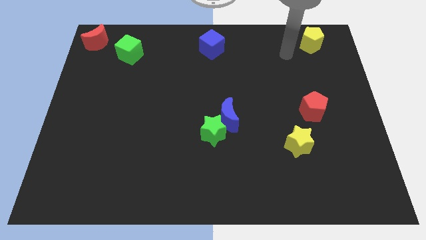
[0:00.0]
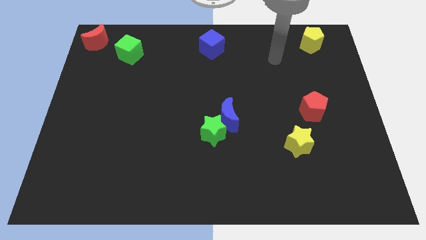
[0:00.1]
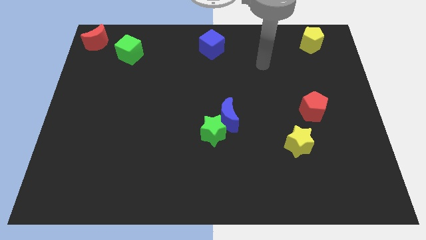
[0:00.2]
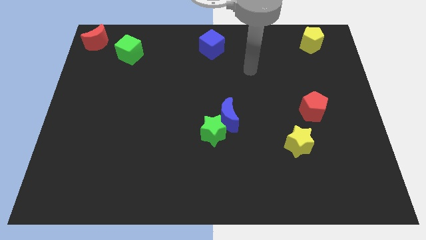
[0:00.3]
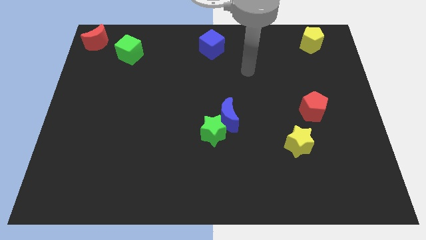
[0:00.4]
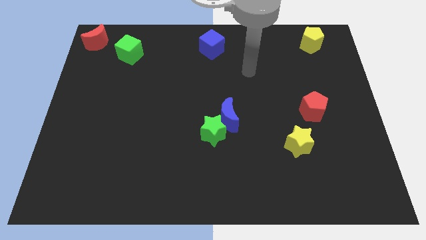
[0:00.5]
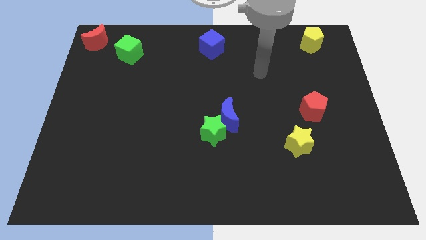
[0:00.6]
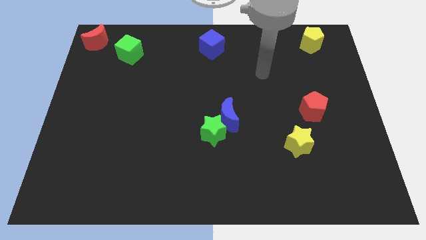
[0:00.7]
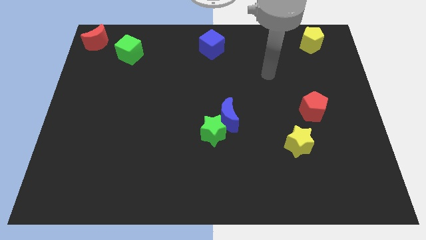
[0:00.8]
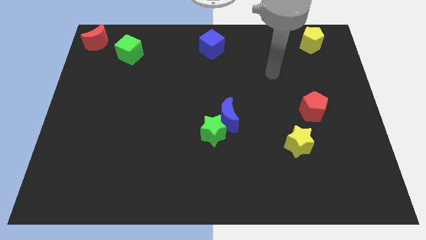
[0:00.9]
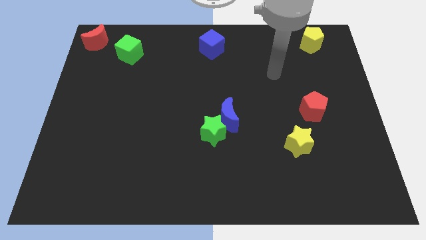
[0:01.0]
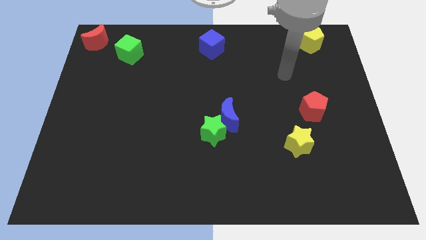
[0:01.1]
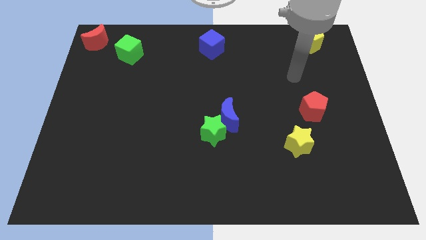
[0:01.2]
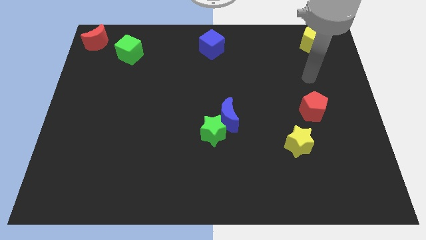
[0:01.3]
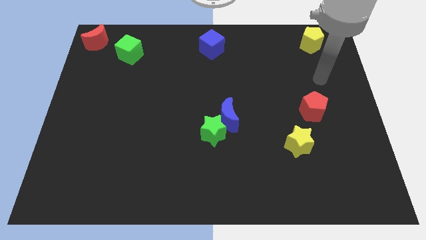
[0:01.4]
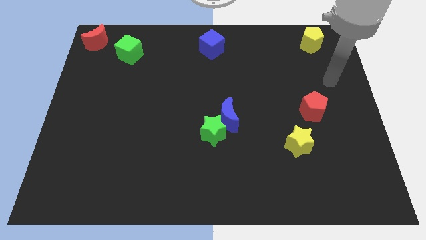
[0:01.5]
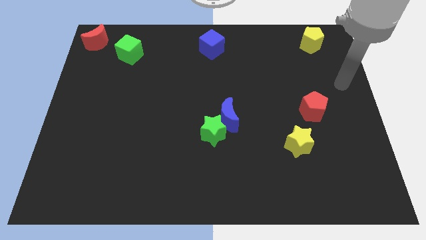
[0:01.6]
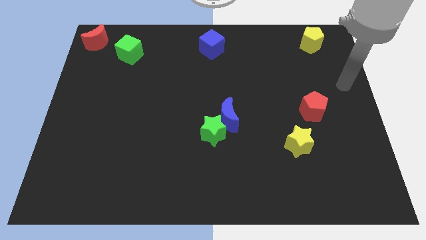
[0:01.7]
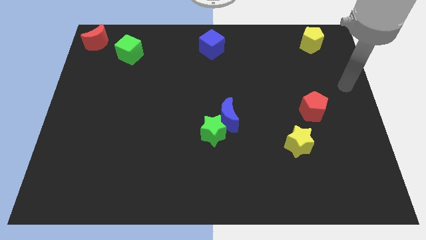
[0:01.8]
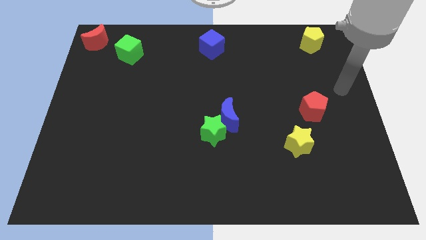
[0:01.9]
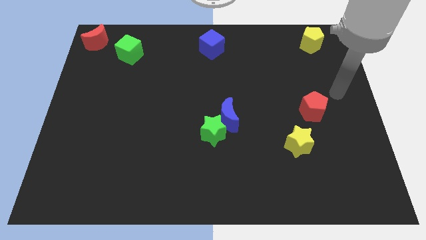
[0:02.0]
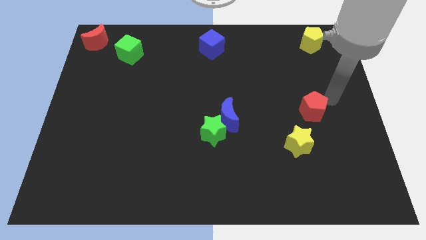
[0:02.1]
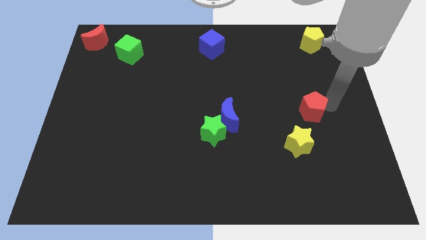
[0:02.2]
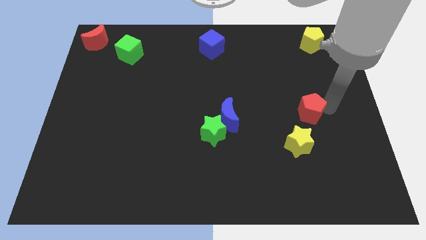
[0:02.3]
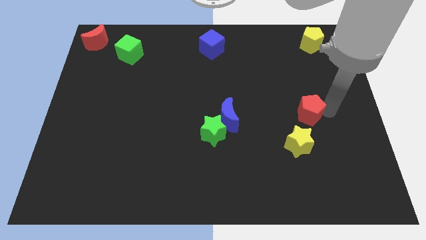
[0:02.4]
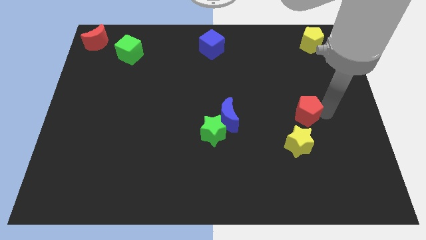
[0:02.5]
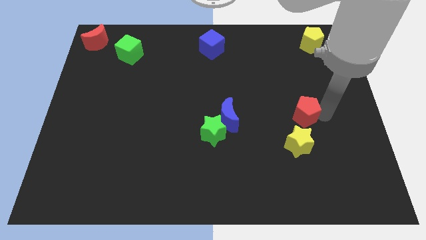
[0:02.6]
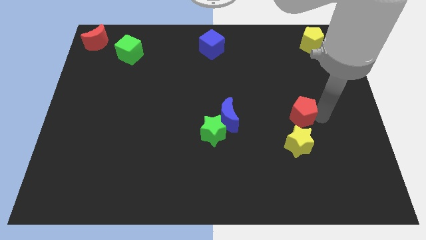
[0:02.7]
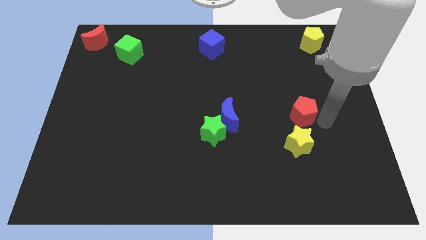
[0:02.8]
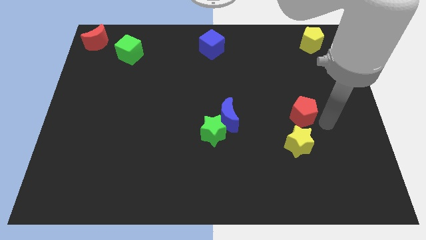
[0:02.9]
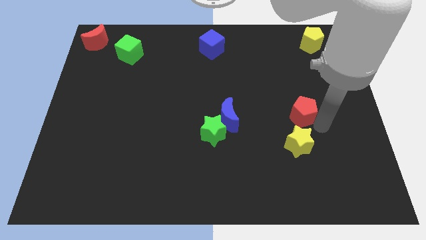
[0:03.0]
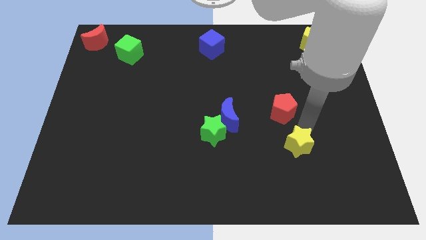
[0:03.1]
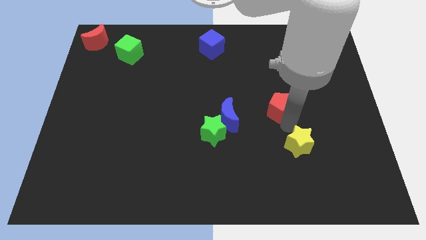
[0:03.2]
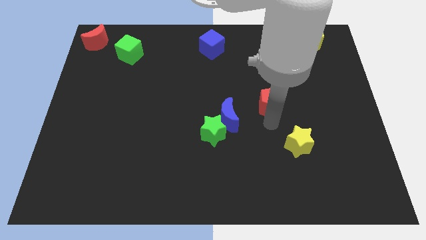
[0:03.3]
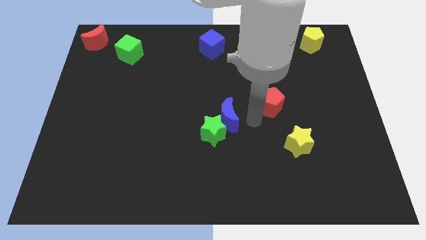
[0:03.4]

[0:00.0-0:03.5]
drag the red pentagon diagonally to the top left side of the yellow star

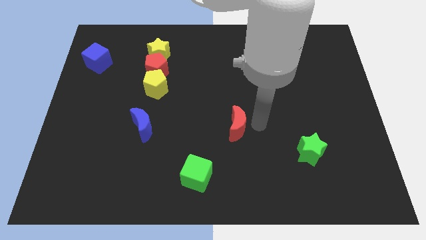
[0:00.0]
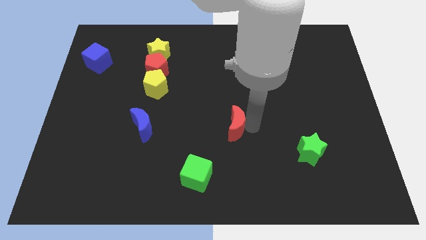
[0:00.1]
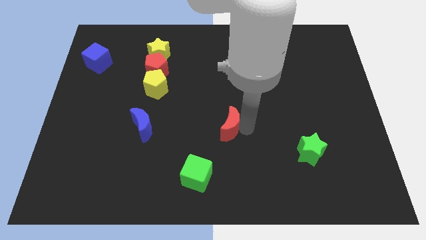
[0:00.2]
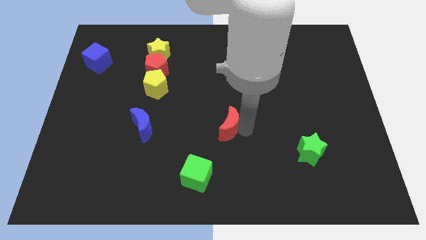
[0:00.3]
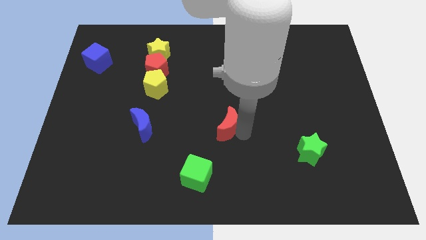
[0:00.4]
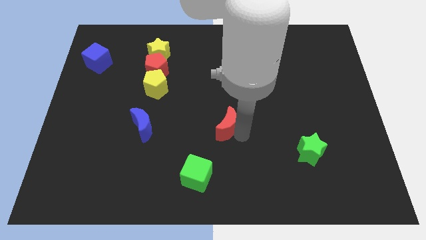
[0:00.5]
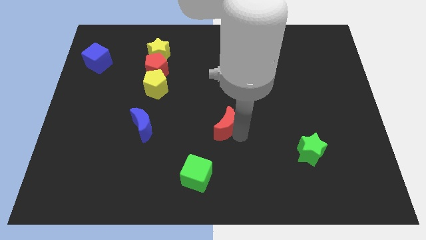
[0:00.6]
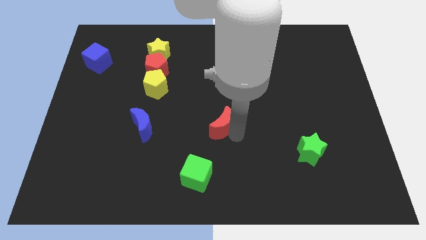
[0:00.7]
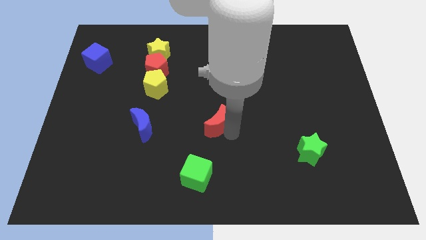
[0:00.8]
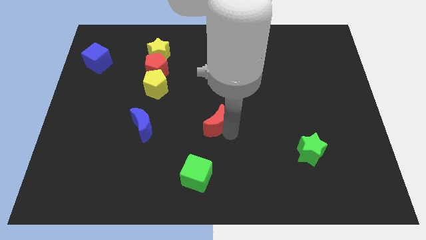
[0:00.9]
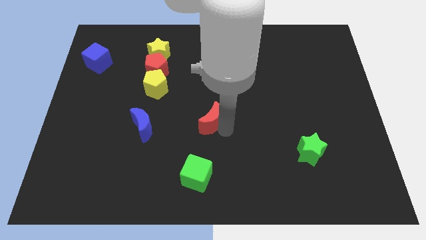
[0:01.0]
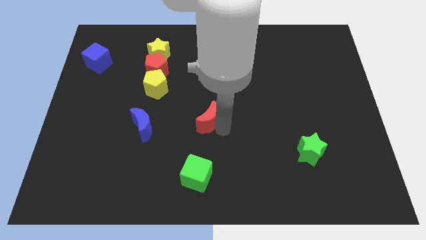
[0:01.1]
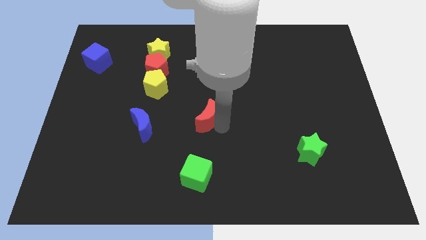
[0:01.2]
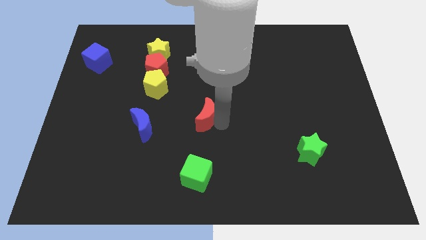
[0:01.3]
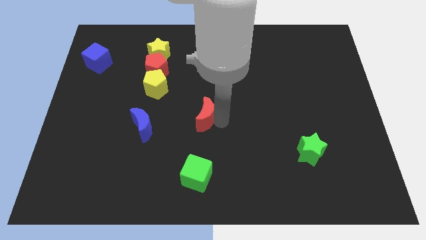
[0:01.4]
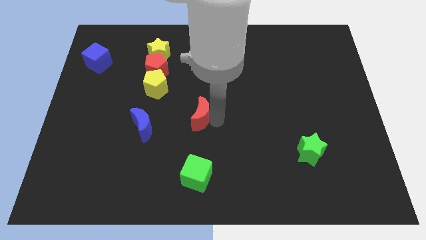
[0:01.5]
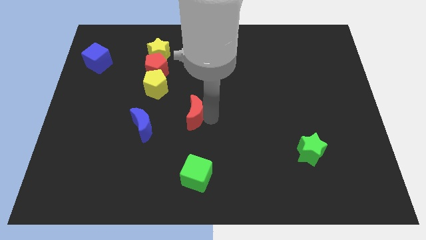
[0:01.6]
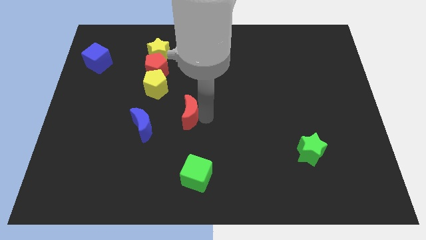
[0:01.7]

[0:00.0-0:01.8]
position red crescent vertically above green cube

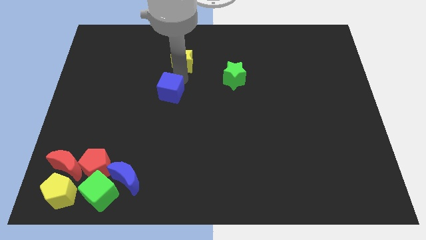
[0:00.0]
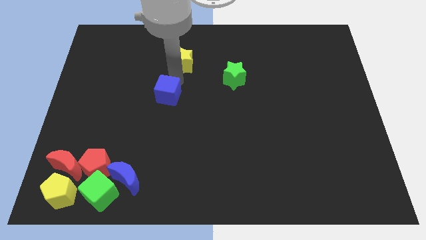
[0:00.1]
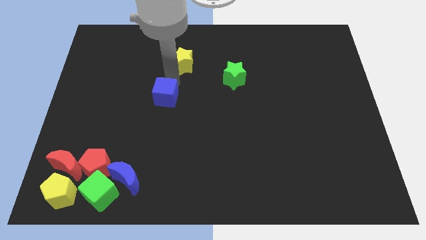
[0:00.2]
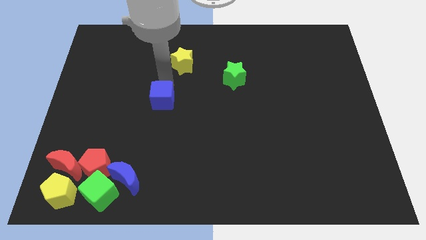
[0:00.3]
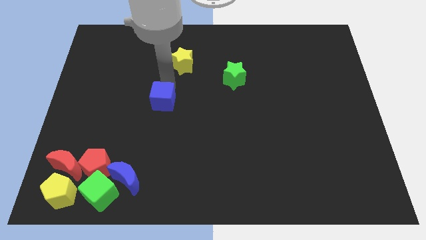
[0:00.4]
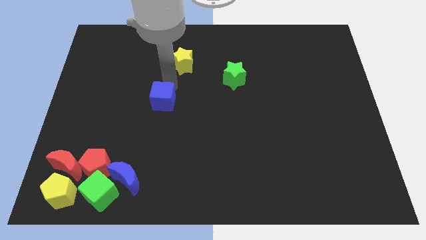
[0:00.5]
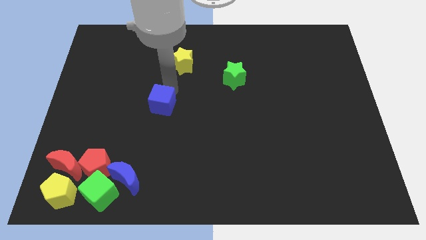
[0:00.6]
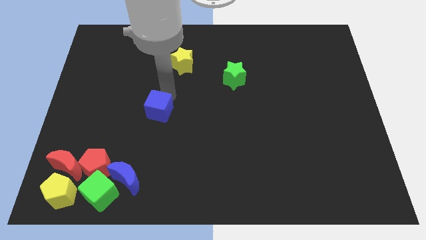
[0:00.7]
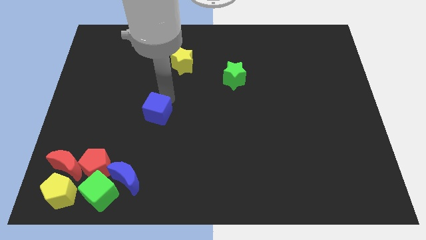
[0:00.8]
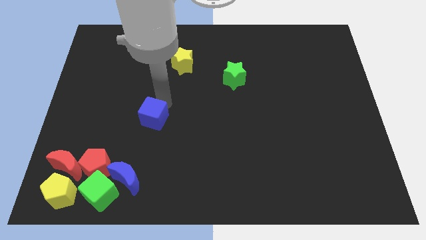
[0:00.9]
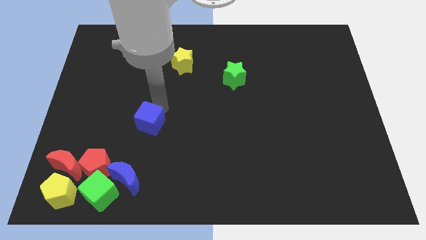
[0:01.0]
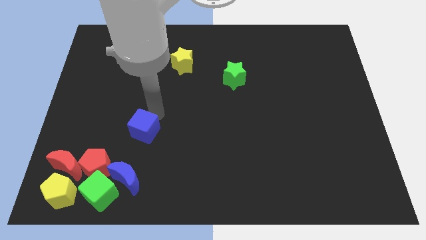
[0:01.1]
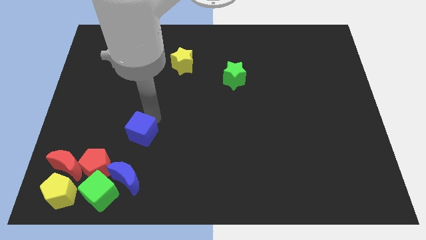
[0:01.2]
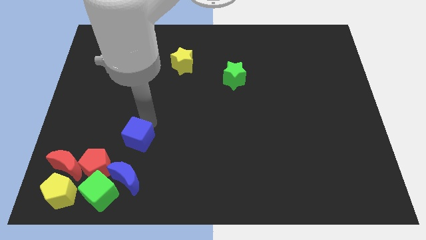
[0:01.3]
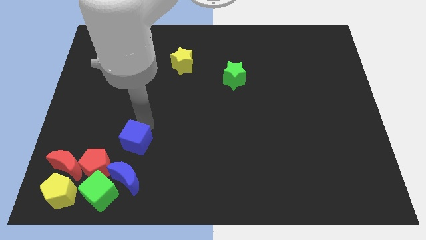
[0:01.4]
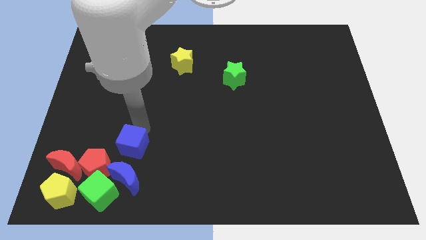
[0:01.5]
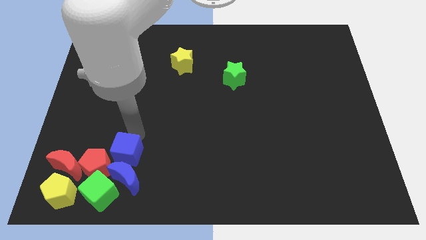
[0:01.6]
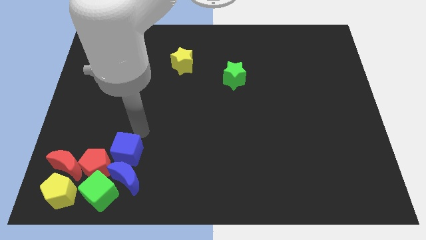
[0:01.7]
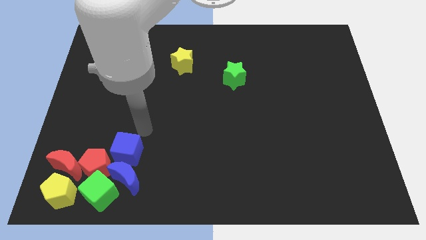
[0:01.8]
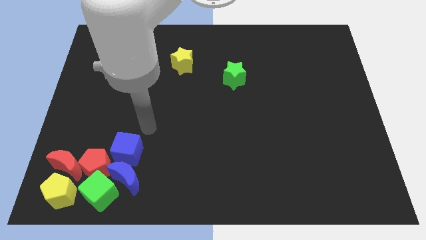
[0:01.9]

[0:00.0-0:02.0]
move the blue cube above the blue crescent

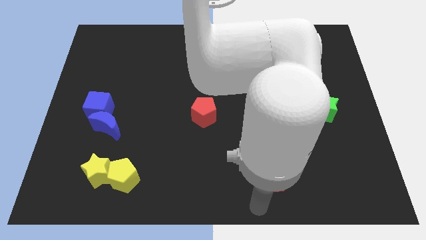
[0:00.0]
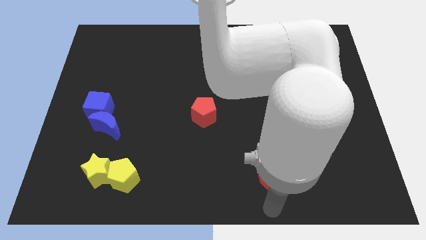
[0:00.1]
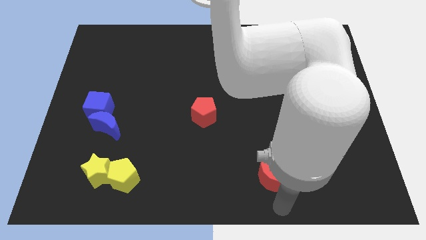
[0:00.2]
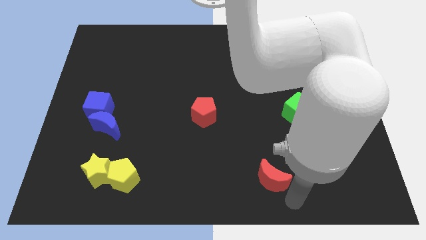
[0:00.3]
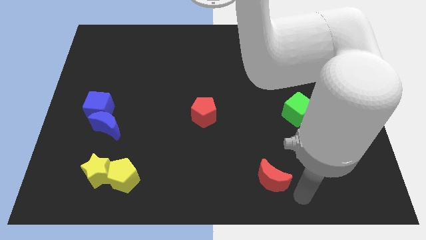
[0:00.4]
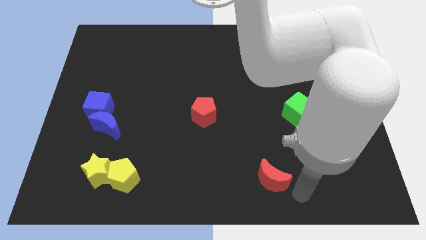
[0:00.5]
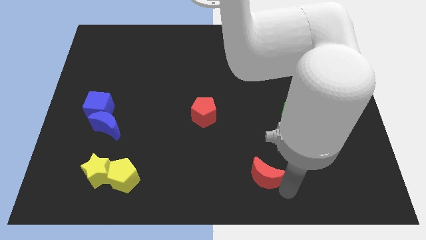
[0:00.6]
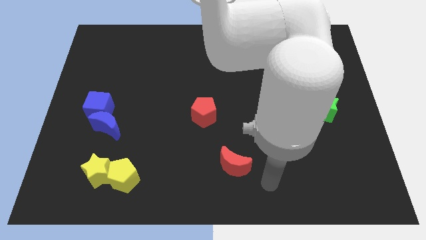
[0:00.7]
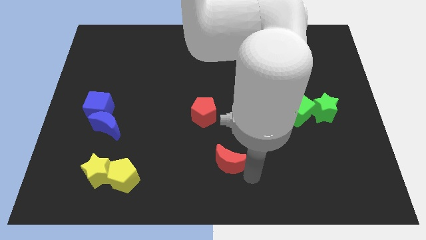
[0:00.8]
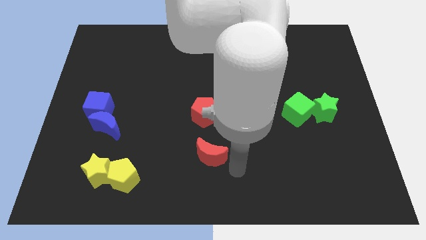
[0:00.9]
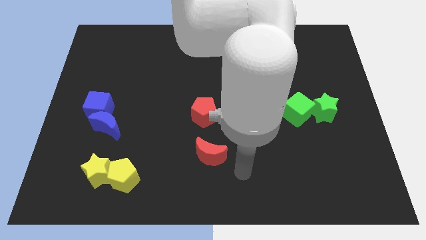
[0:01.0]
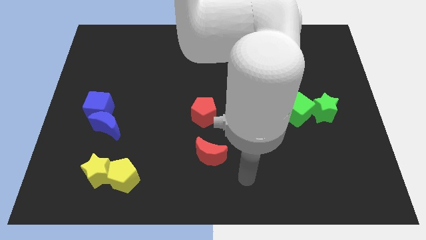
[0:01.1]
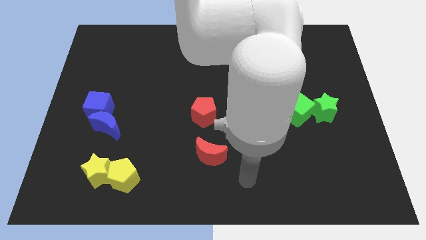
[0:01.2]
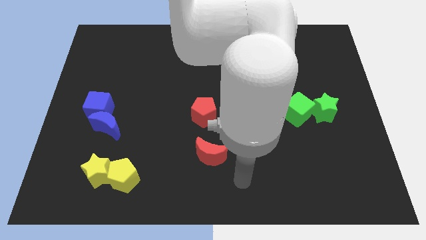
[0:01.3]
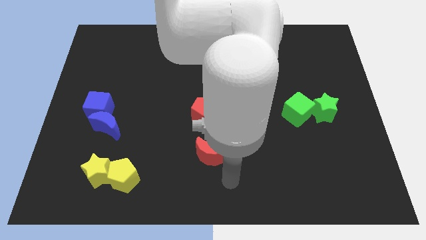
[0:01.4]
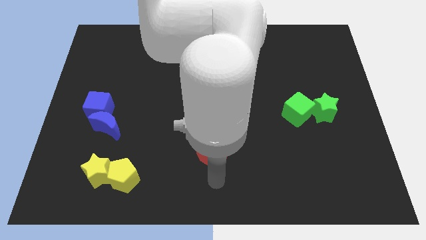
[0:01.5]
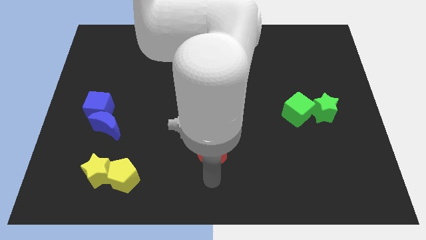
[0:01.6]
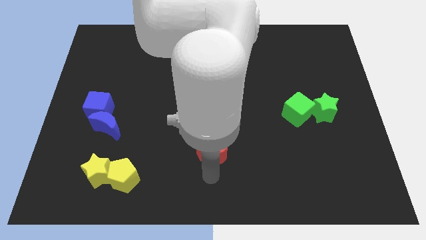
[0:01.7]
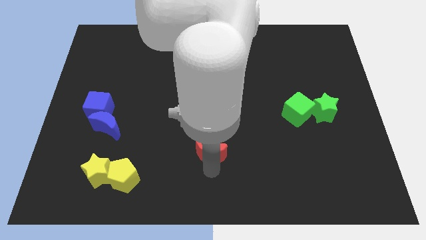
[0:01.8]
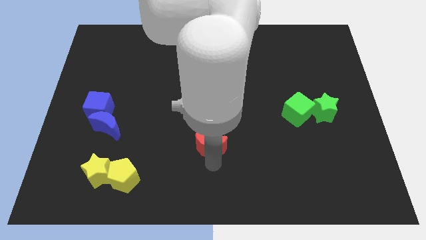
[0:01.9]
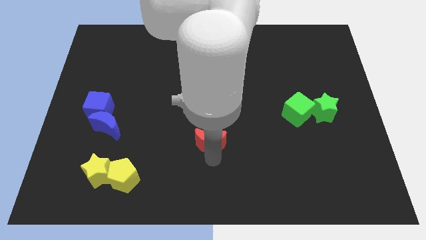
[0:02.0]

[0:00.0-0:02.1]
move the red moon below the red pentagon
